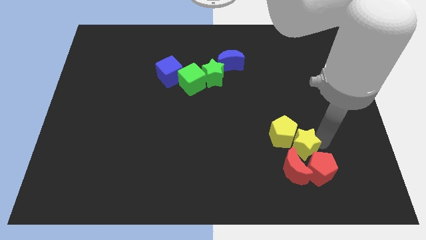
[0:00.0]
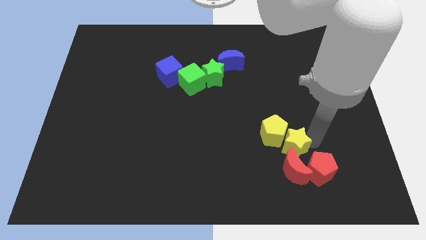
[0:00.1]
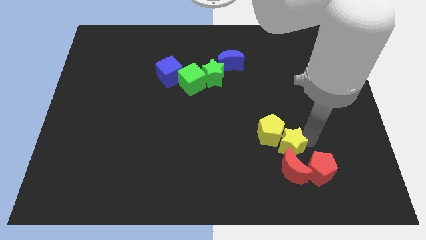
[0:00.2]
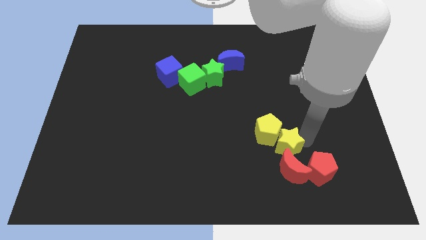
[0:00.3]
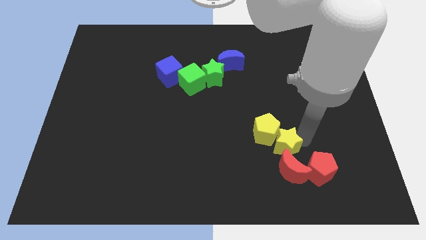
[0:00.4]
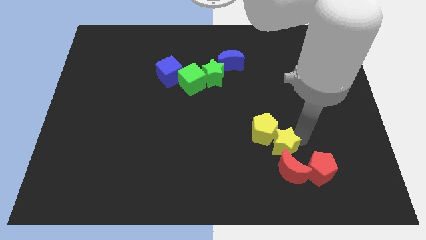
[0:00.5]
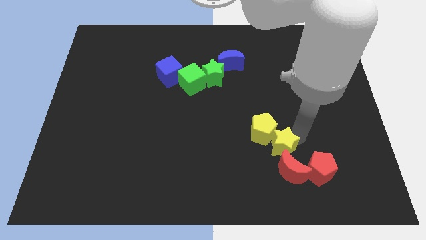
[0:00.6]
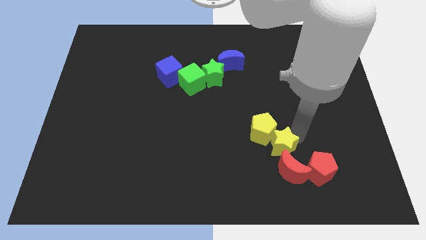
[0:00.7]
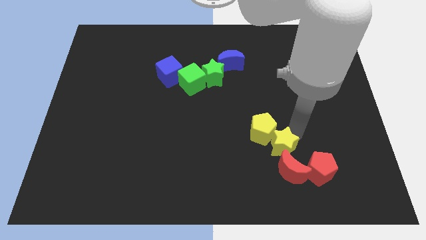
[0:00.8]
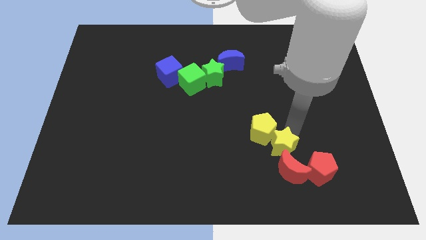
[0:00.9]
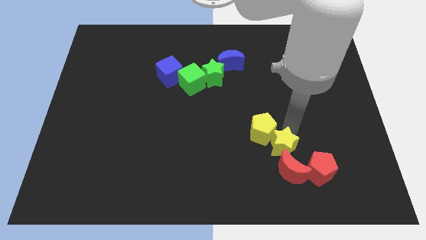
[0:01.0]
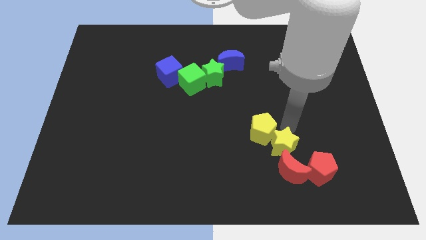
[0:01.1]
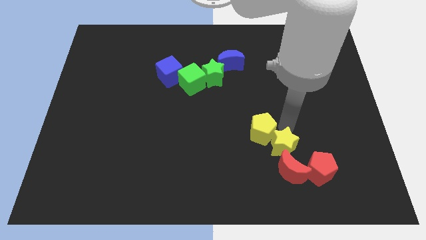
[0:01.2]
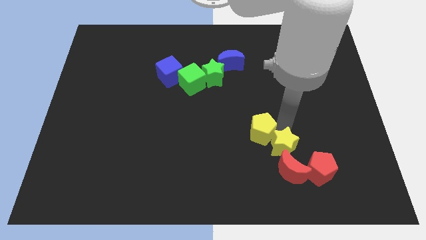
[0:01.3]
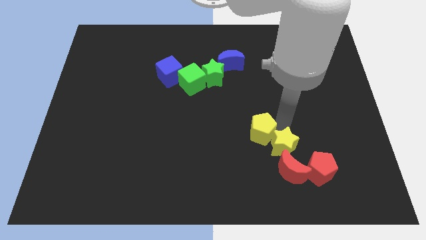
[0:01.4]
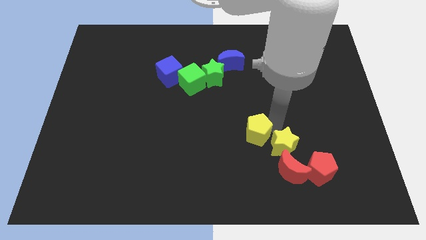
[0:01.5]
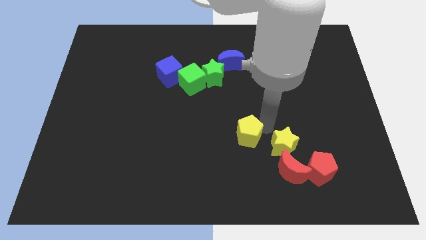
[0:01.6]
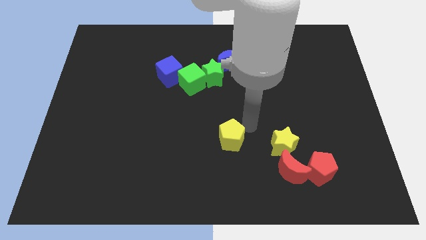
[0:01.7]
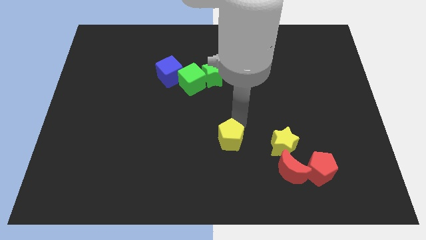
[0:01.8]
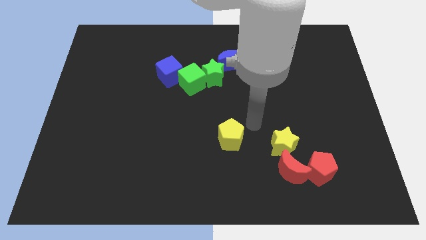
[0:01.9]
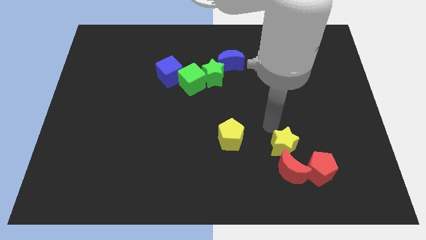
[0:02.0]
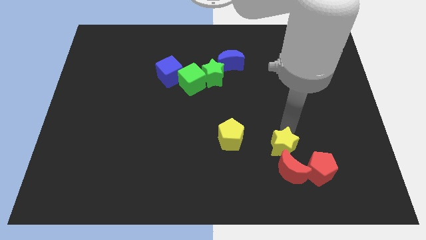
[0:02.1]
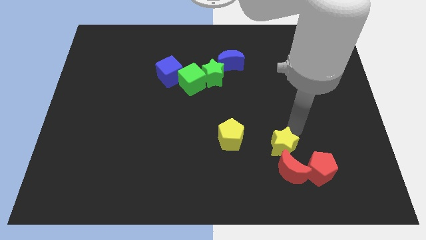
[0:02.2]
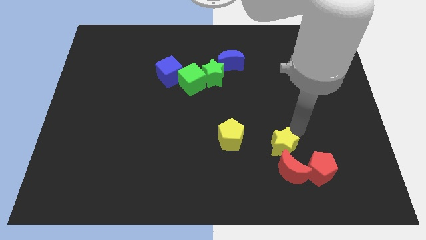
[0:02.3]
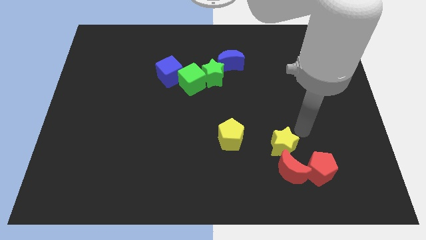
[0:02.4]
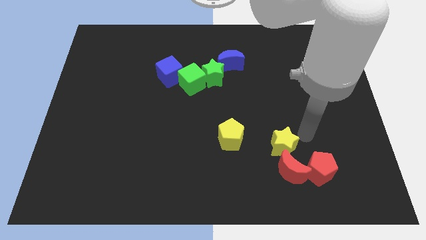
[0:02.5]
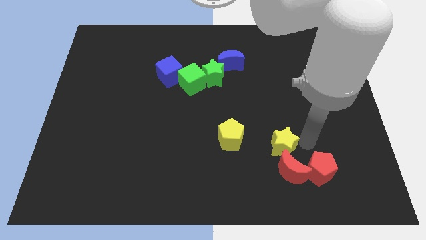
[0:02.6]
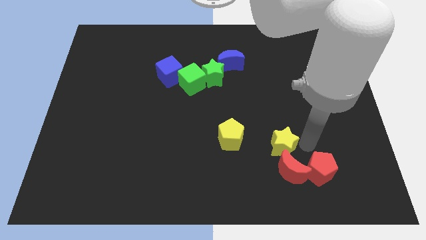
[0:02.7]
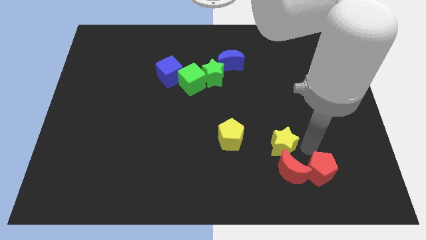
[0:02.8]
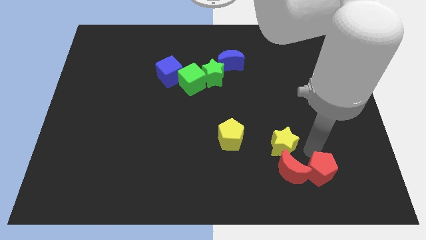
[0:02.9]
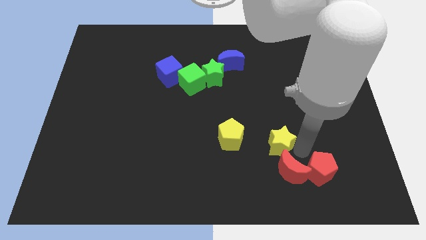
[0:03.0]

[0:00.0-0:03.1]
separate yellow pentagon from the yellow star

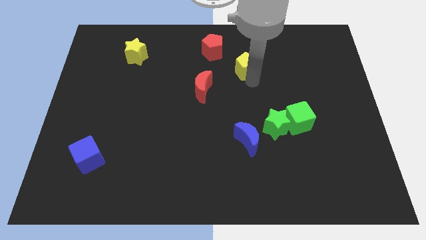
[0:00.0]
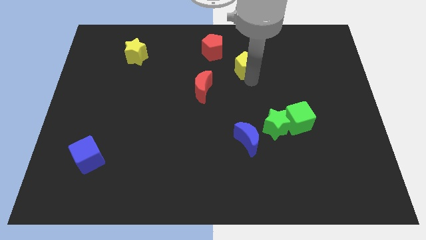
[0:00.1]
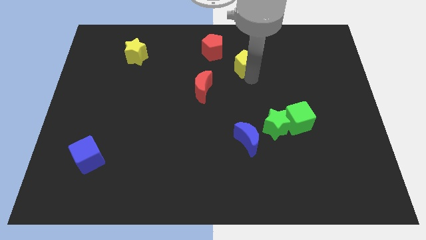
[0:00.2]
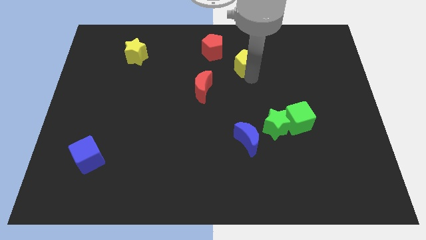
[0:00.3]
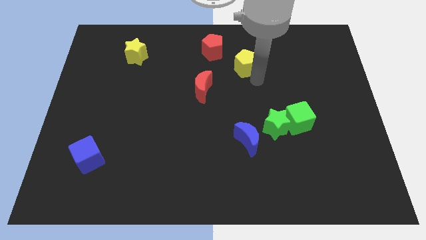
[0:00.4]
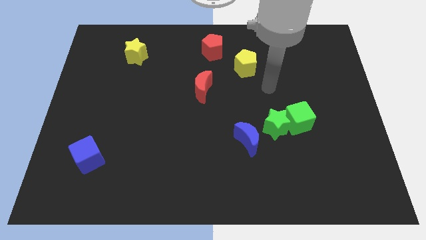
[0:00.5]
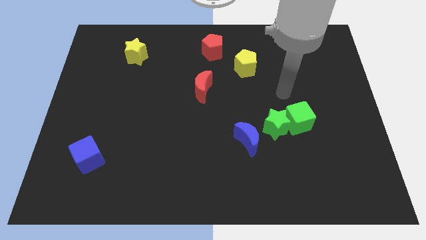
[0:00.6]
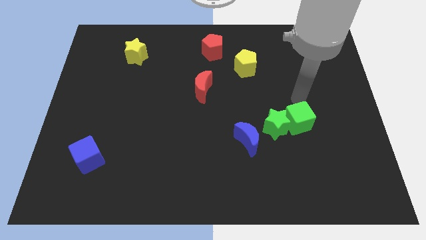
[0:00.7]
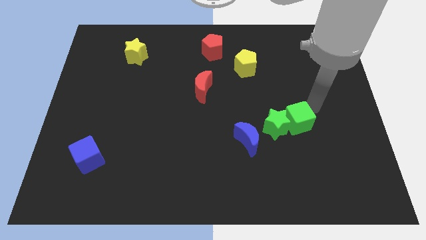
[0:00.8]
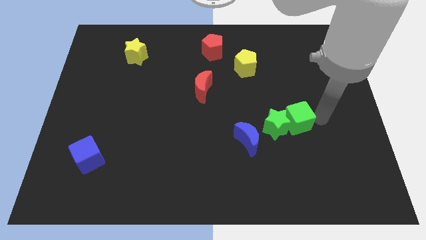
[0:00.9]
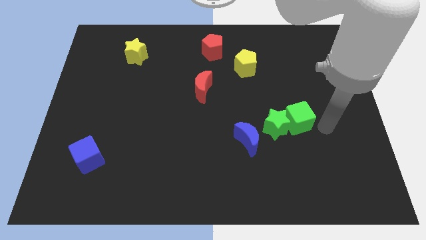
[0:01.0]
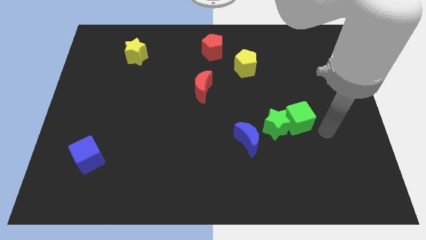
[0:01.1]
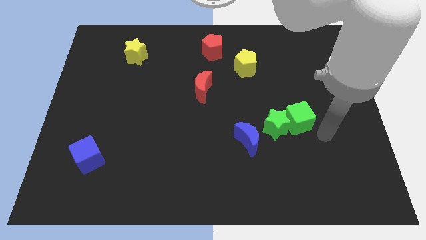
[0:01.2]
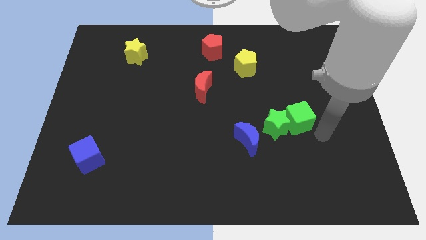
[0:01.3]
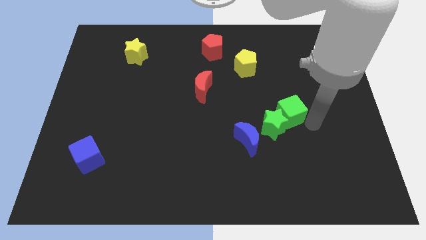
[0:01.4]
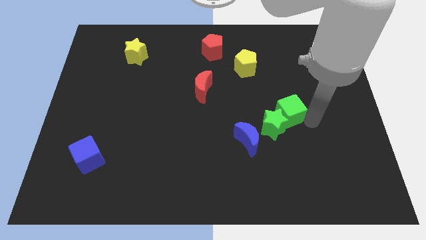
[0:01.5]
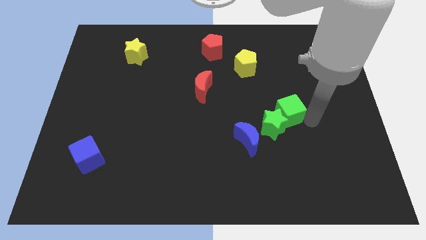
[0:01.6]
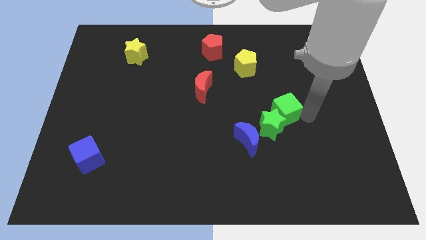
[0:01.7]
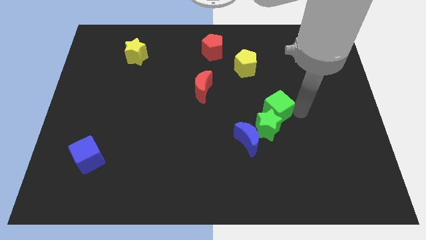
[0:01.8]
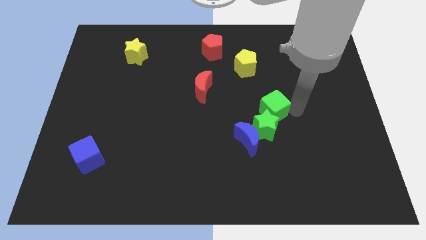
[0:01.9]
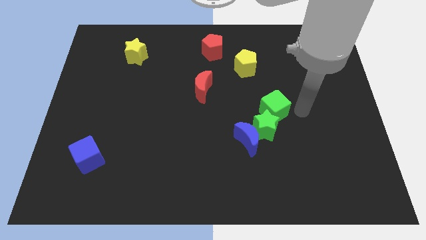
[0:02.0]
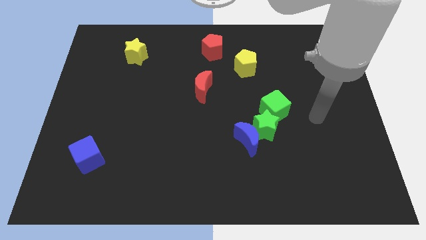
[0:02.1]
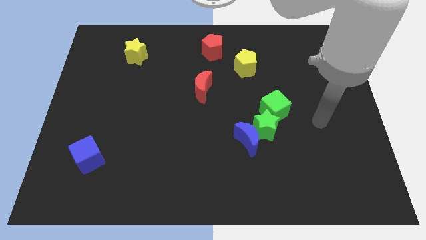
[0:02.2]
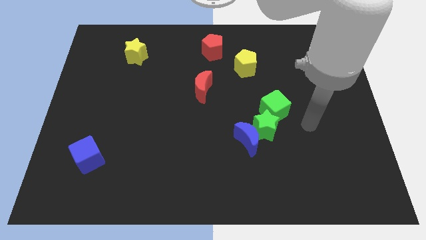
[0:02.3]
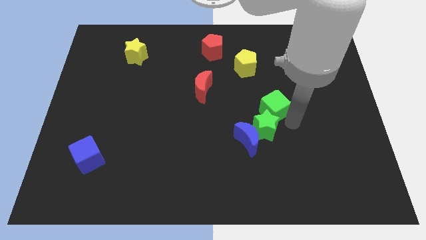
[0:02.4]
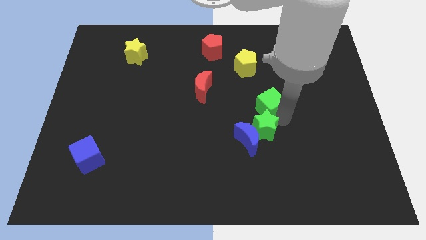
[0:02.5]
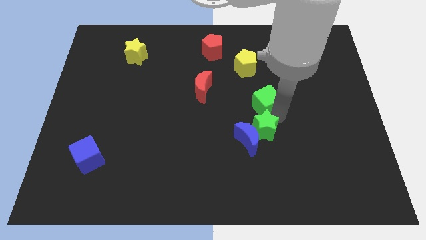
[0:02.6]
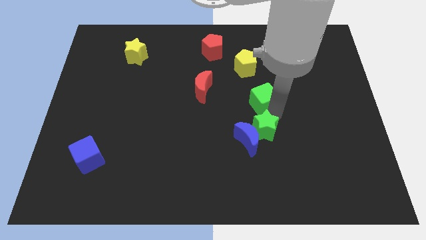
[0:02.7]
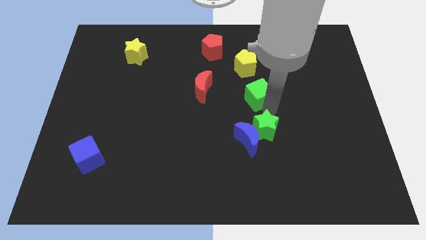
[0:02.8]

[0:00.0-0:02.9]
push the green cube above the green star

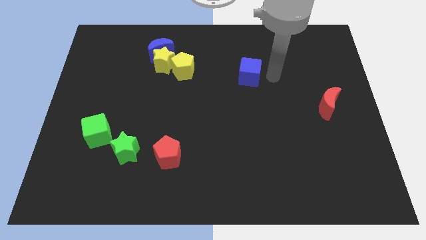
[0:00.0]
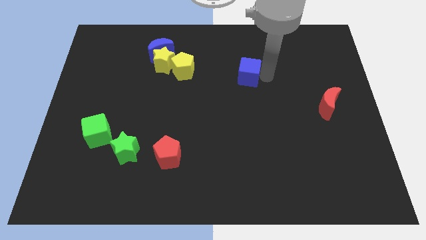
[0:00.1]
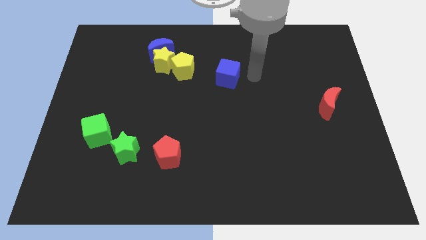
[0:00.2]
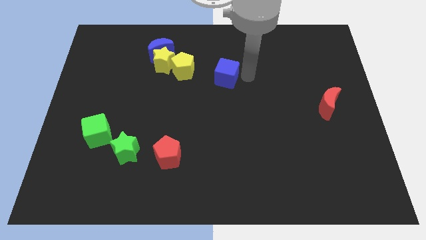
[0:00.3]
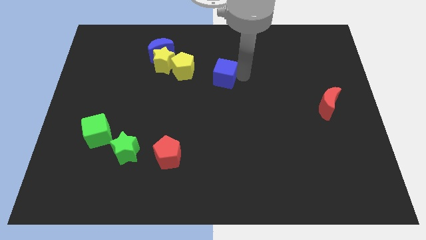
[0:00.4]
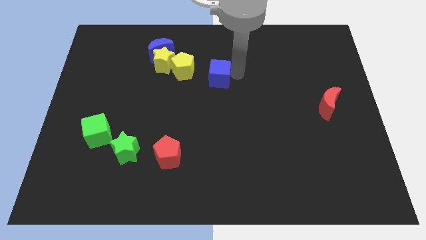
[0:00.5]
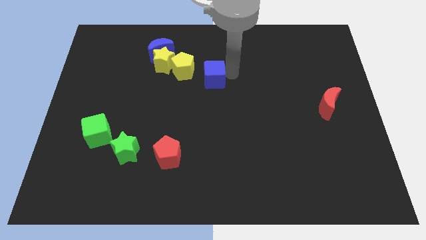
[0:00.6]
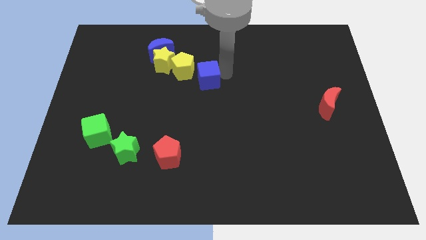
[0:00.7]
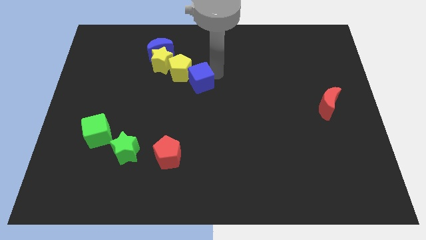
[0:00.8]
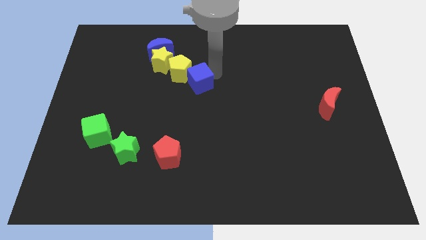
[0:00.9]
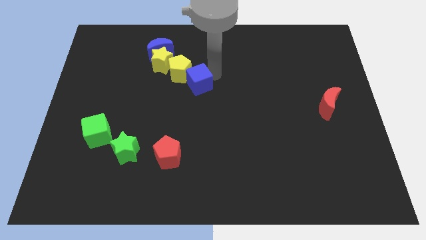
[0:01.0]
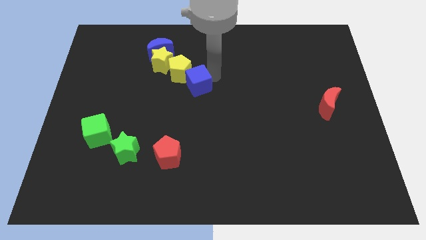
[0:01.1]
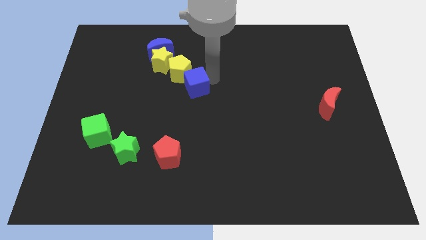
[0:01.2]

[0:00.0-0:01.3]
place the blue cube to the bottom right of the yellow pentagon

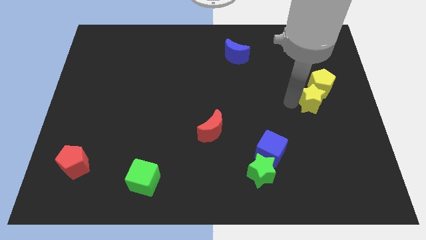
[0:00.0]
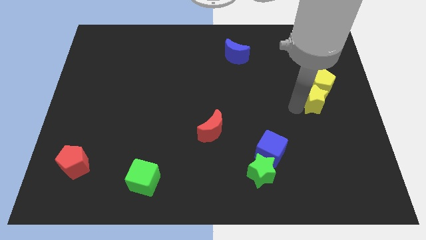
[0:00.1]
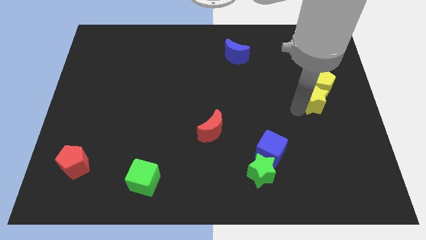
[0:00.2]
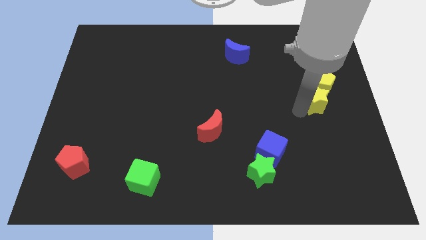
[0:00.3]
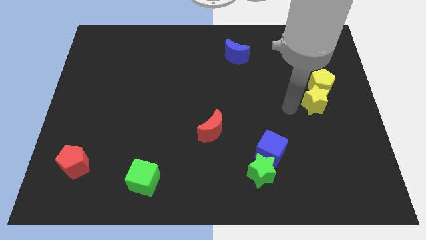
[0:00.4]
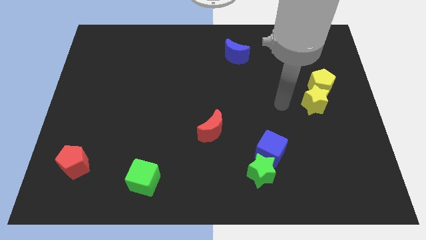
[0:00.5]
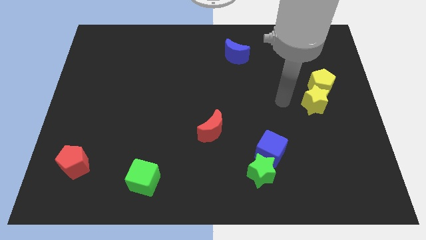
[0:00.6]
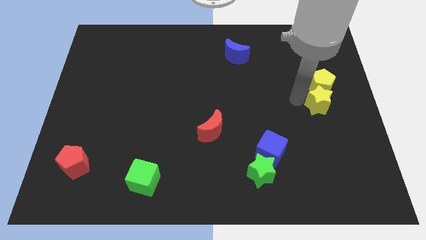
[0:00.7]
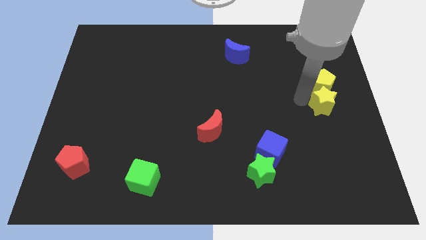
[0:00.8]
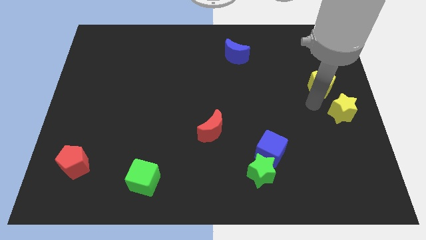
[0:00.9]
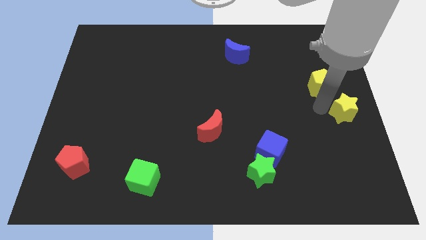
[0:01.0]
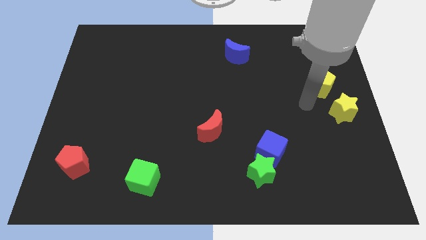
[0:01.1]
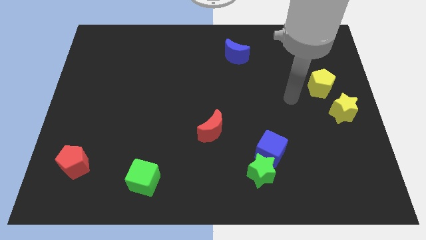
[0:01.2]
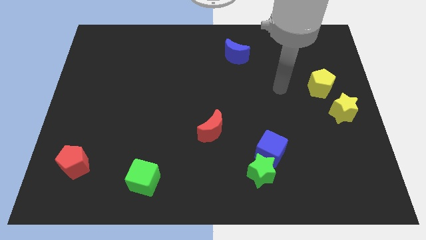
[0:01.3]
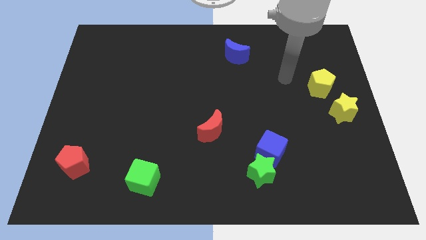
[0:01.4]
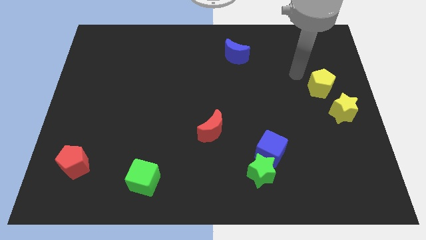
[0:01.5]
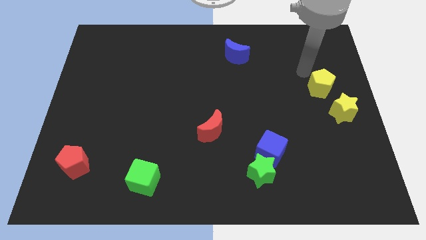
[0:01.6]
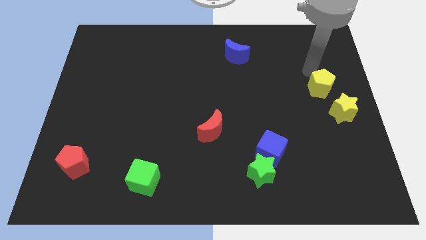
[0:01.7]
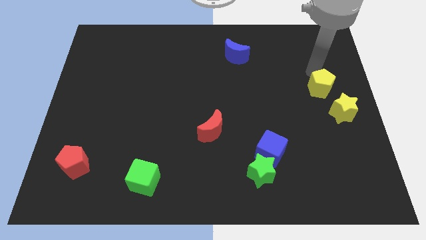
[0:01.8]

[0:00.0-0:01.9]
push yellow star and yellow pentagon apart
